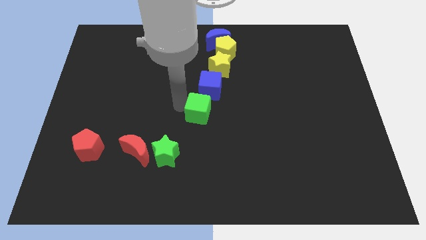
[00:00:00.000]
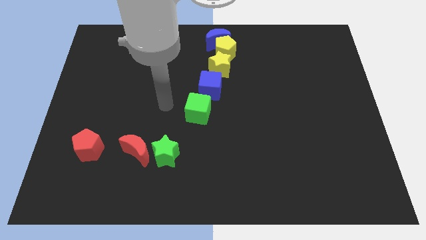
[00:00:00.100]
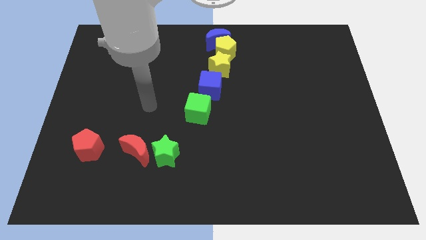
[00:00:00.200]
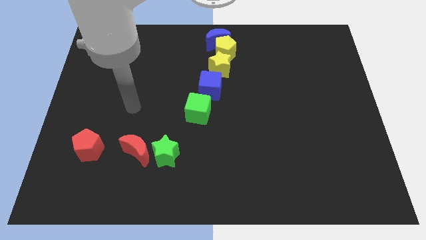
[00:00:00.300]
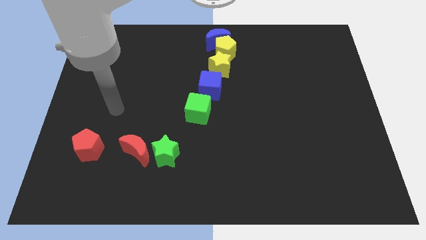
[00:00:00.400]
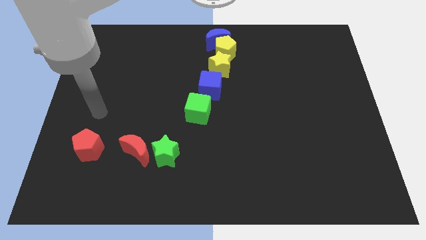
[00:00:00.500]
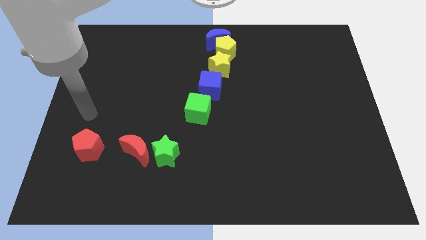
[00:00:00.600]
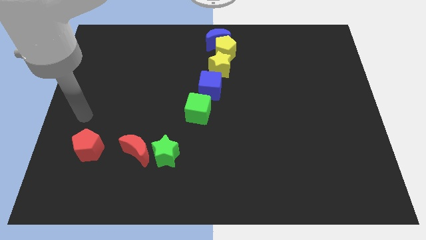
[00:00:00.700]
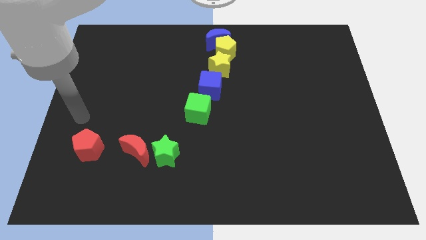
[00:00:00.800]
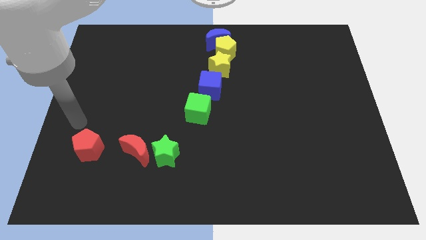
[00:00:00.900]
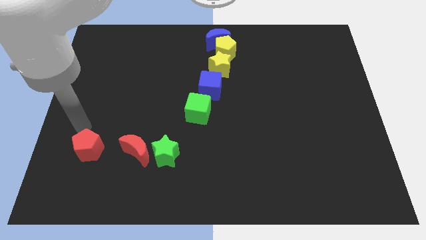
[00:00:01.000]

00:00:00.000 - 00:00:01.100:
place your arm at the top side of the red pentagon

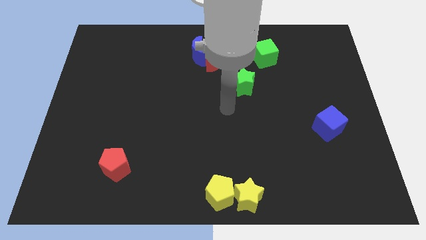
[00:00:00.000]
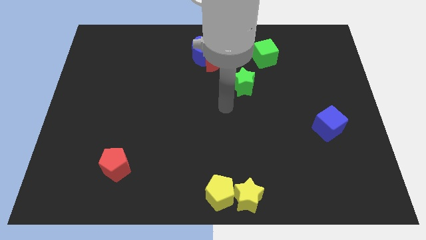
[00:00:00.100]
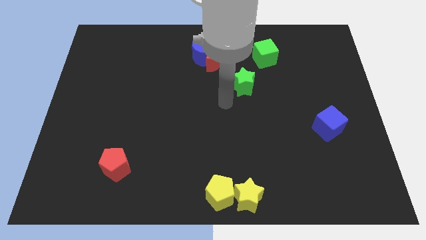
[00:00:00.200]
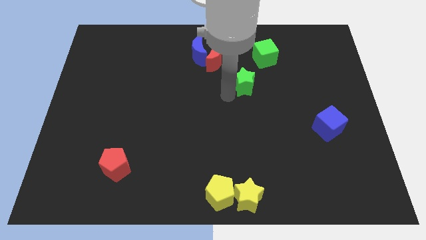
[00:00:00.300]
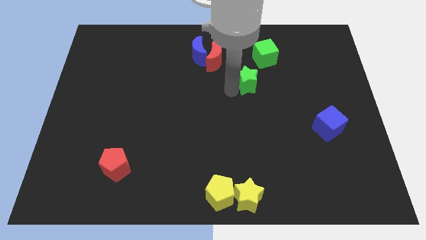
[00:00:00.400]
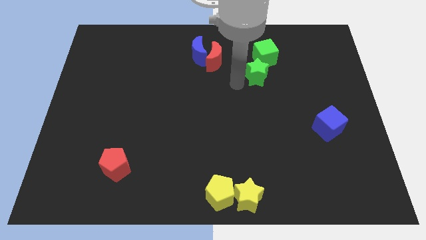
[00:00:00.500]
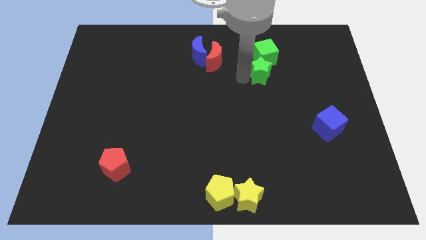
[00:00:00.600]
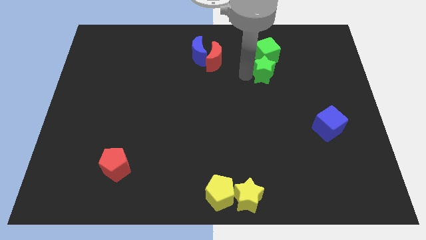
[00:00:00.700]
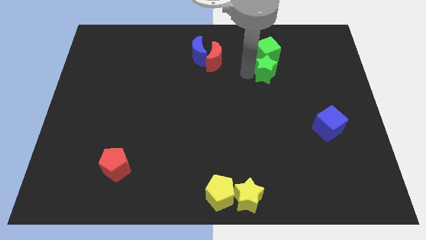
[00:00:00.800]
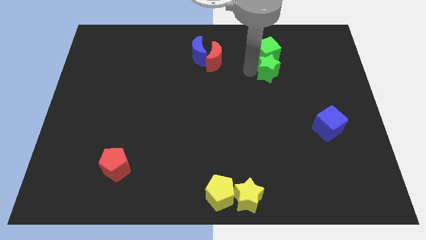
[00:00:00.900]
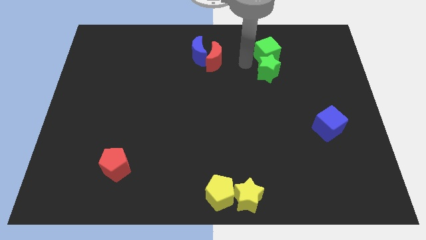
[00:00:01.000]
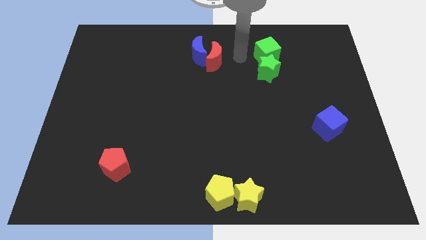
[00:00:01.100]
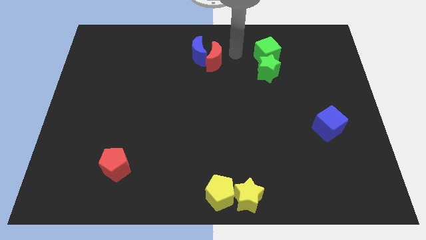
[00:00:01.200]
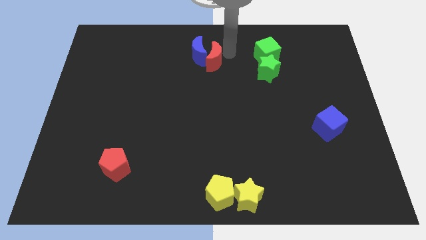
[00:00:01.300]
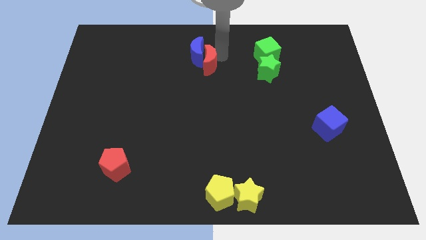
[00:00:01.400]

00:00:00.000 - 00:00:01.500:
place green star to the bottom of the green cube

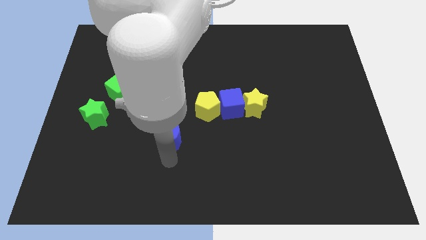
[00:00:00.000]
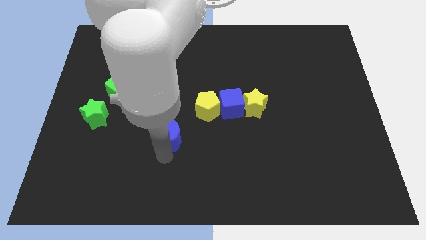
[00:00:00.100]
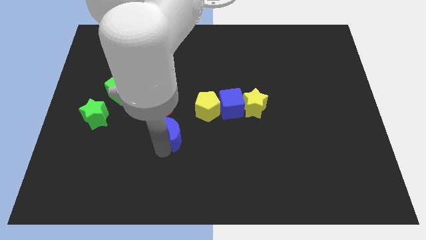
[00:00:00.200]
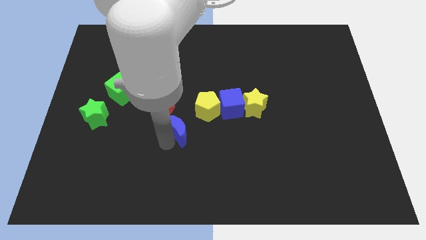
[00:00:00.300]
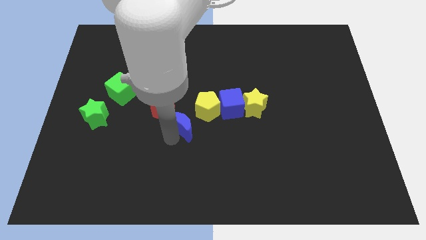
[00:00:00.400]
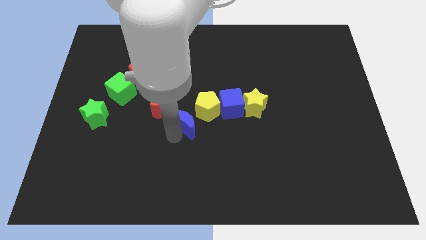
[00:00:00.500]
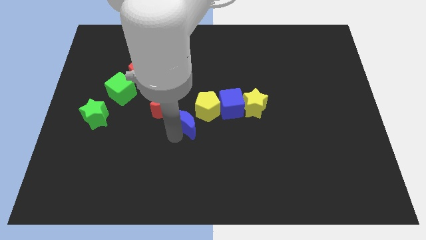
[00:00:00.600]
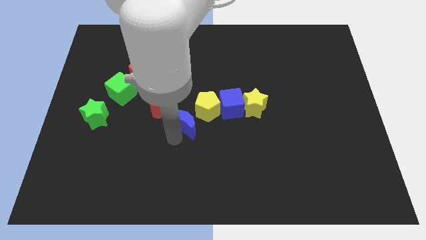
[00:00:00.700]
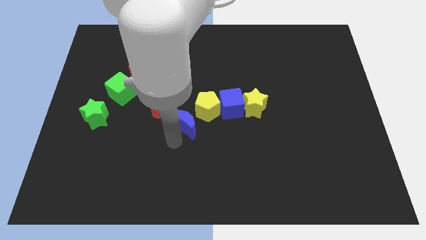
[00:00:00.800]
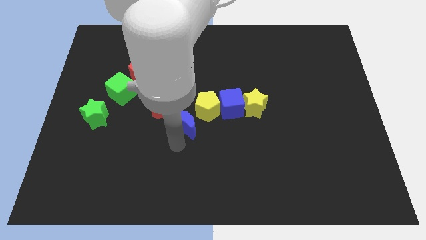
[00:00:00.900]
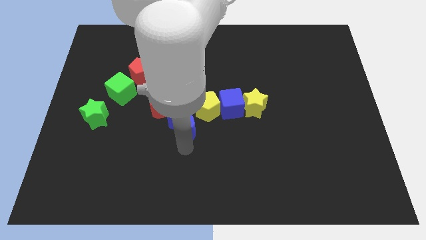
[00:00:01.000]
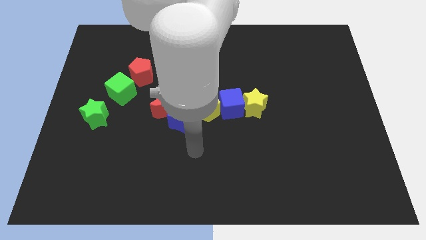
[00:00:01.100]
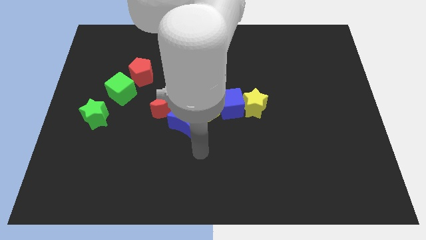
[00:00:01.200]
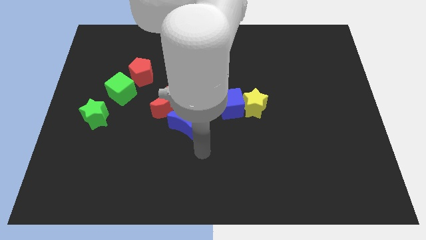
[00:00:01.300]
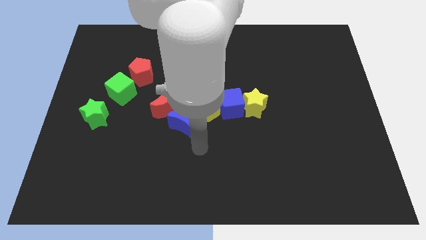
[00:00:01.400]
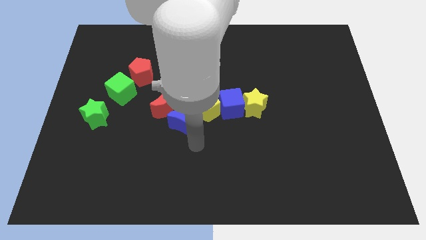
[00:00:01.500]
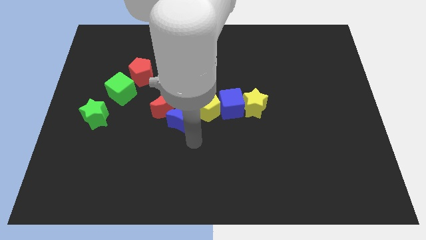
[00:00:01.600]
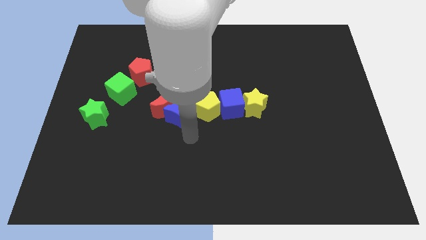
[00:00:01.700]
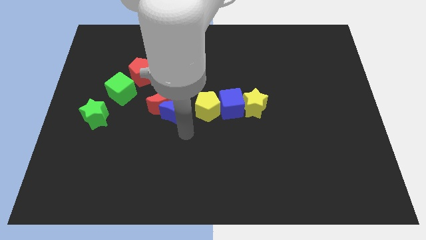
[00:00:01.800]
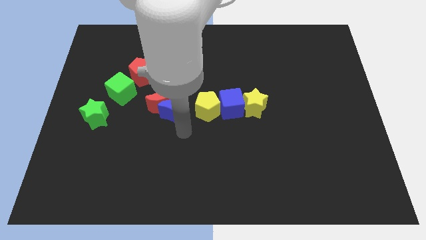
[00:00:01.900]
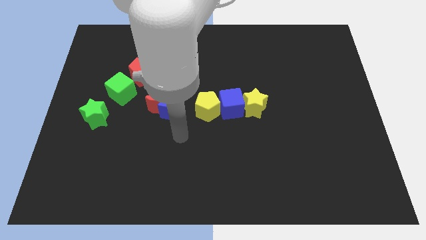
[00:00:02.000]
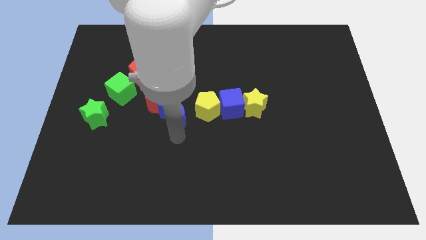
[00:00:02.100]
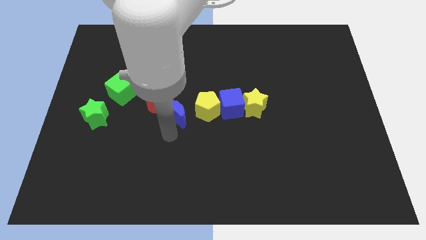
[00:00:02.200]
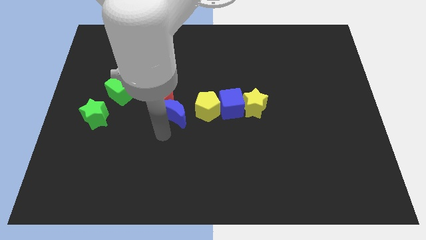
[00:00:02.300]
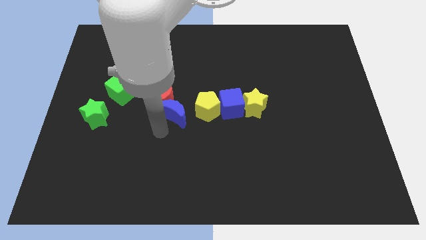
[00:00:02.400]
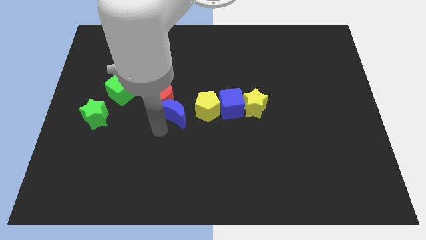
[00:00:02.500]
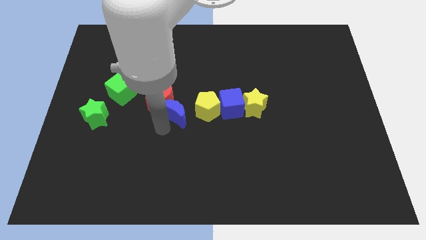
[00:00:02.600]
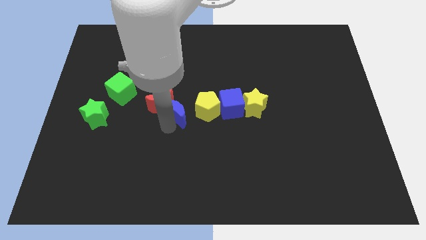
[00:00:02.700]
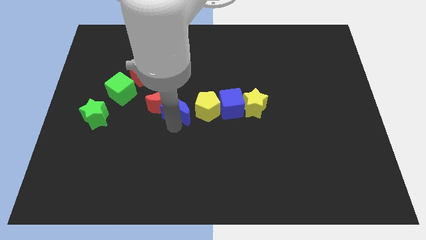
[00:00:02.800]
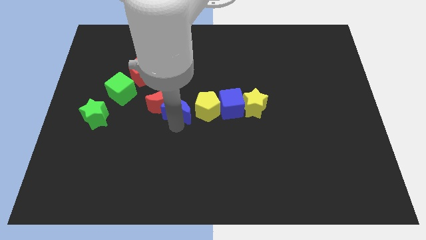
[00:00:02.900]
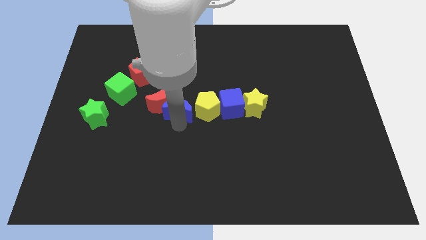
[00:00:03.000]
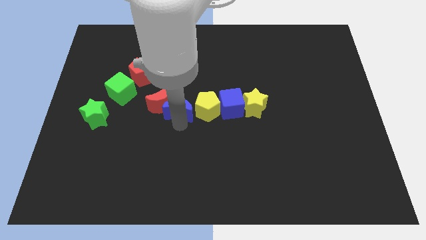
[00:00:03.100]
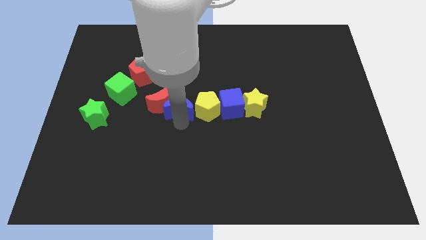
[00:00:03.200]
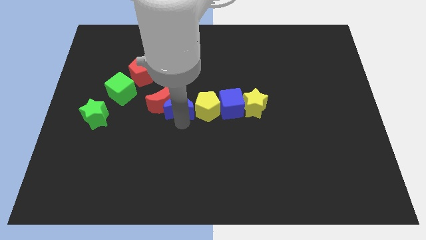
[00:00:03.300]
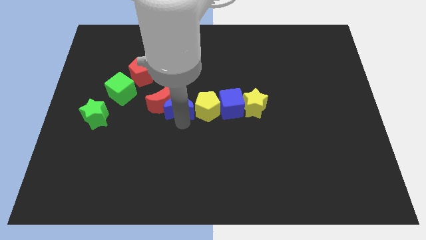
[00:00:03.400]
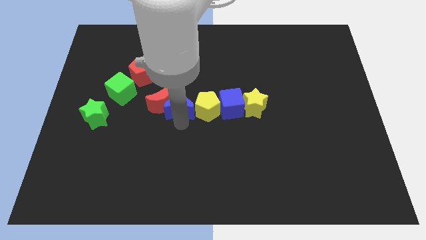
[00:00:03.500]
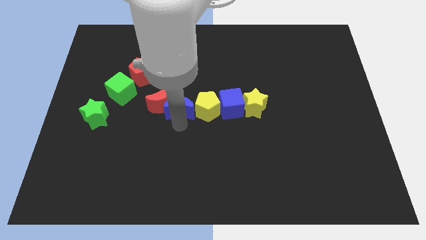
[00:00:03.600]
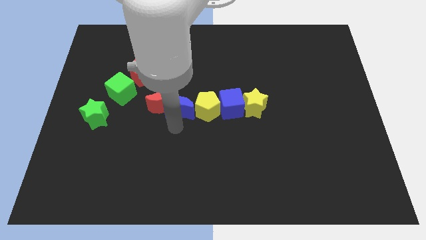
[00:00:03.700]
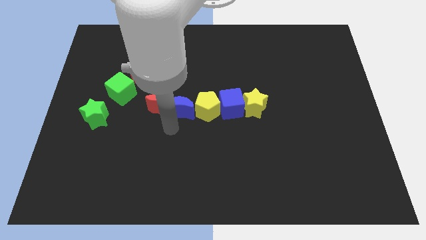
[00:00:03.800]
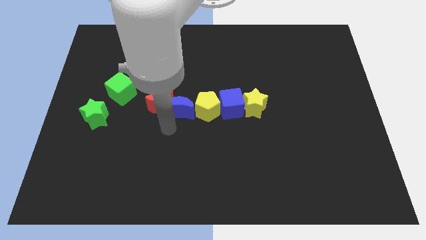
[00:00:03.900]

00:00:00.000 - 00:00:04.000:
place blue moon between red moon and yellow pentagon

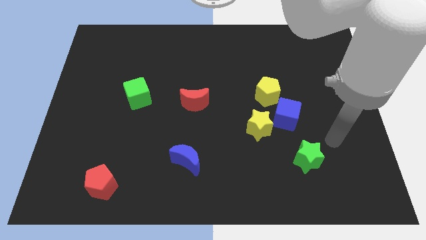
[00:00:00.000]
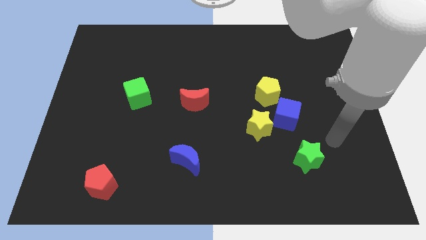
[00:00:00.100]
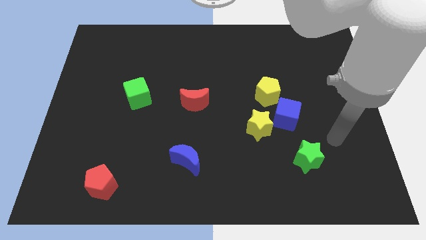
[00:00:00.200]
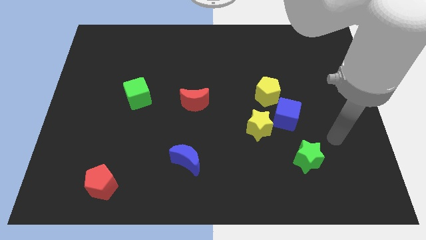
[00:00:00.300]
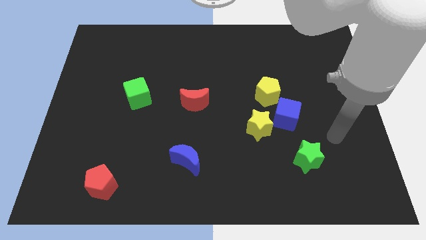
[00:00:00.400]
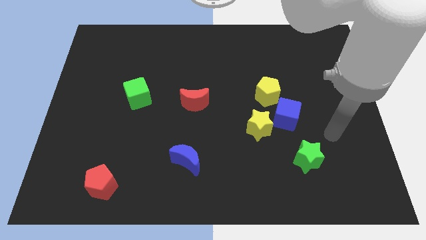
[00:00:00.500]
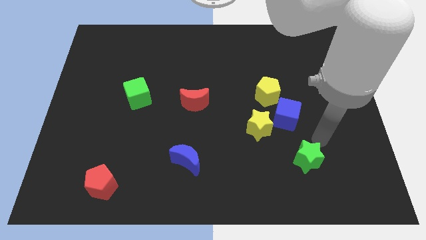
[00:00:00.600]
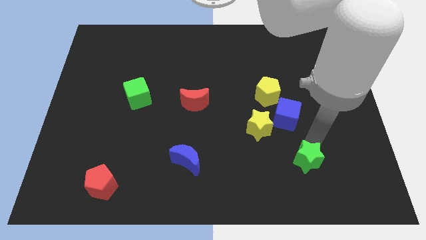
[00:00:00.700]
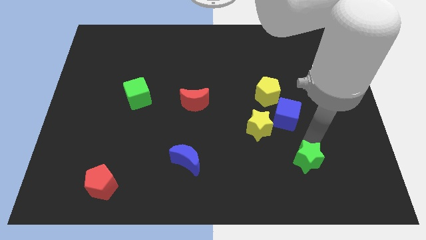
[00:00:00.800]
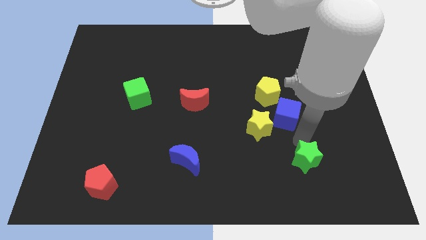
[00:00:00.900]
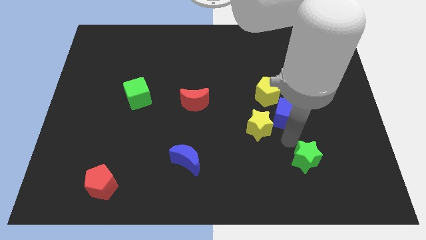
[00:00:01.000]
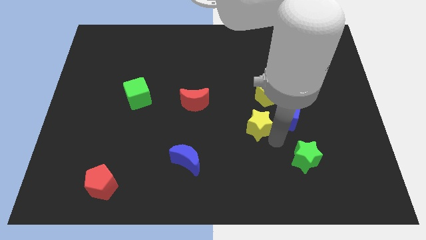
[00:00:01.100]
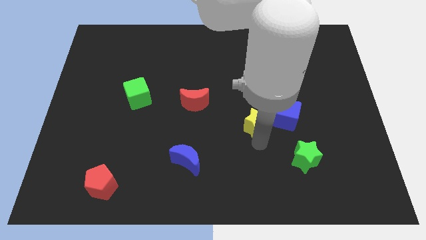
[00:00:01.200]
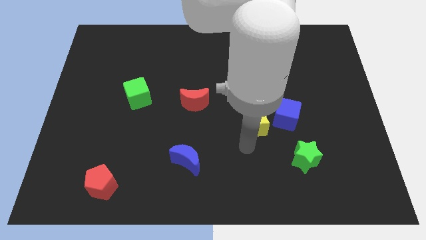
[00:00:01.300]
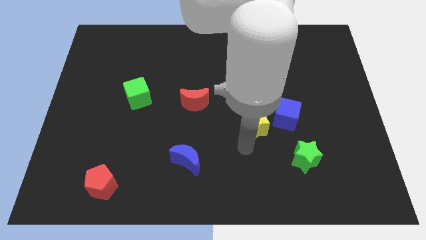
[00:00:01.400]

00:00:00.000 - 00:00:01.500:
move your arm below the yellow star

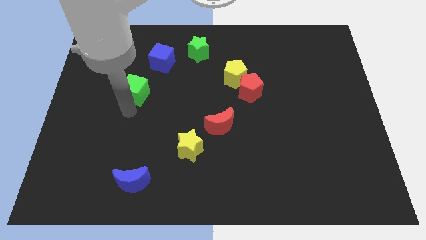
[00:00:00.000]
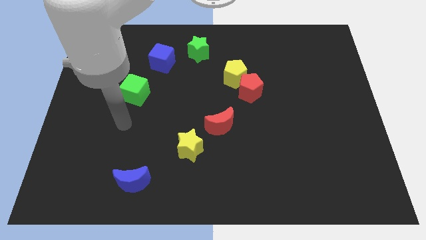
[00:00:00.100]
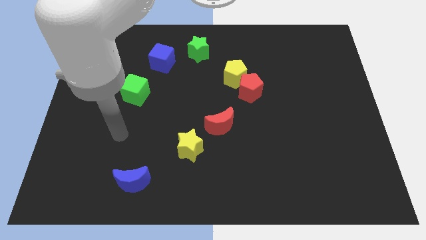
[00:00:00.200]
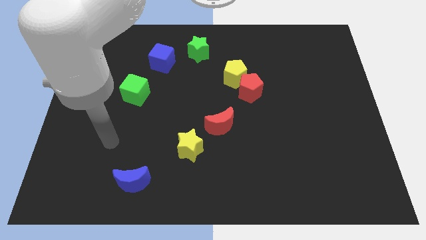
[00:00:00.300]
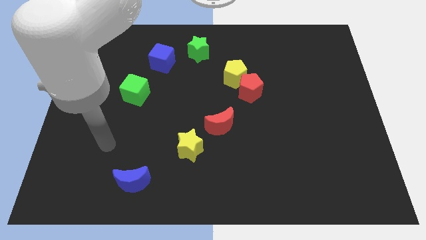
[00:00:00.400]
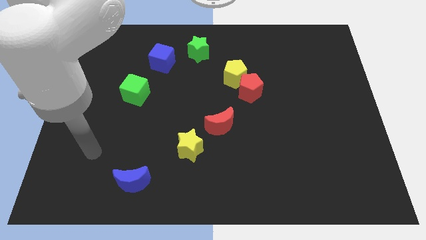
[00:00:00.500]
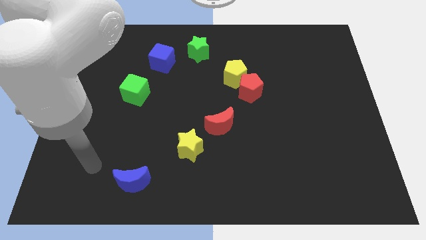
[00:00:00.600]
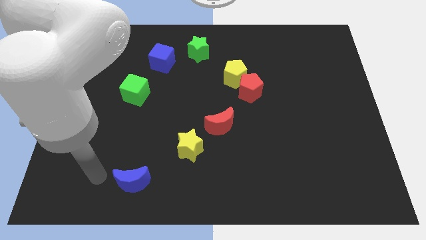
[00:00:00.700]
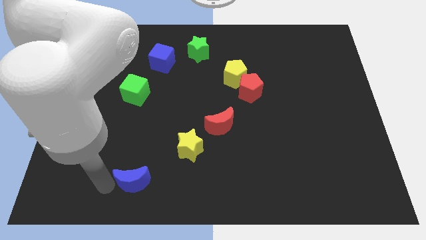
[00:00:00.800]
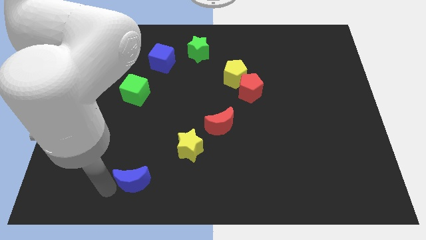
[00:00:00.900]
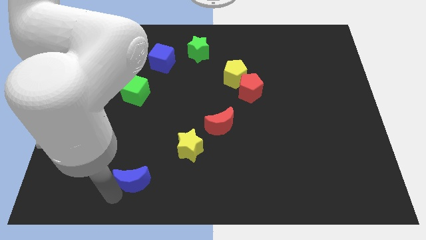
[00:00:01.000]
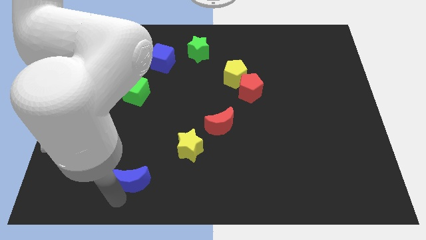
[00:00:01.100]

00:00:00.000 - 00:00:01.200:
move your arm away from green cube
